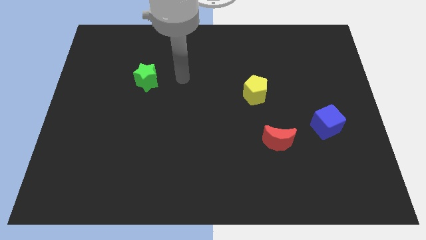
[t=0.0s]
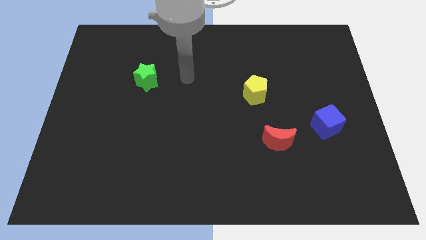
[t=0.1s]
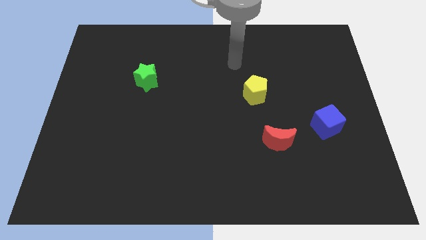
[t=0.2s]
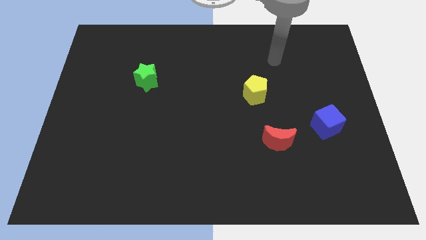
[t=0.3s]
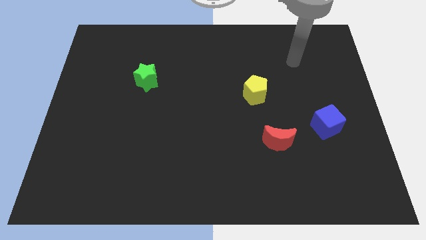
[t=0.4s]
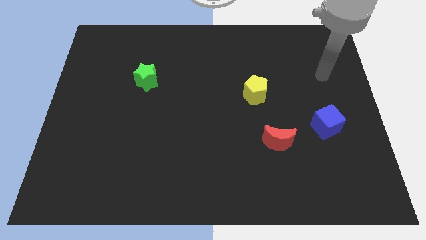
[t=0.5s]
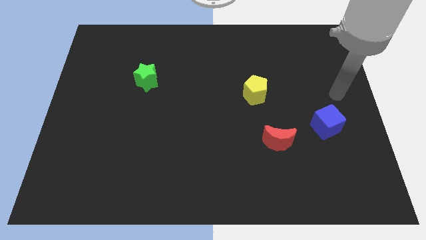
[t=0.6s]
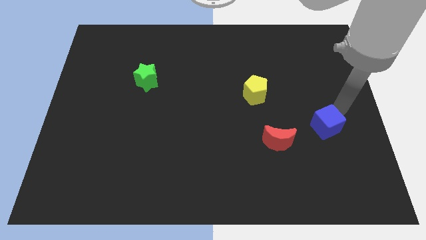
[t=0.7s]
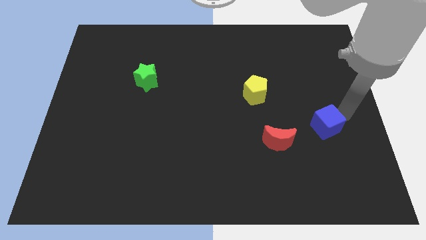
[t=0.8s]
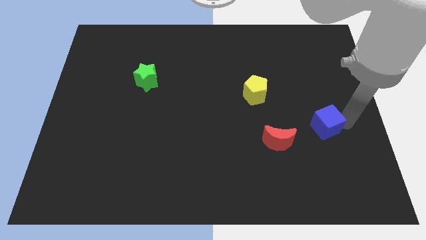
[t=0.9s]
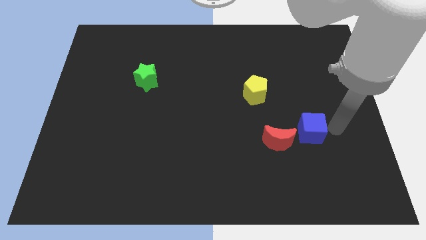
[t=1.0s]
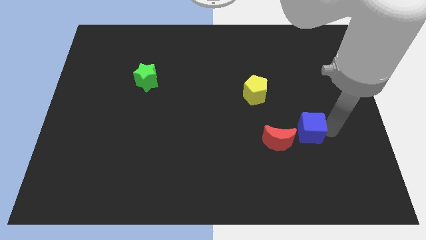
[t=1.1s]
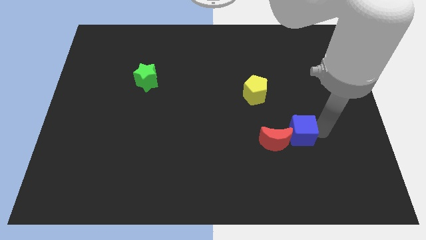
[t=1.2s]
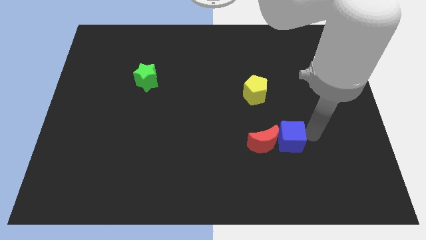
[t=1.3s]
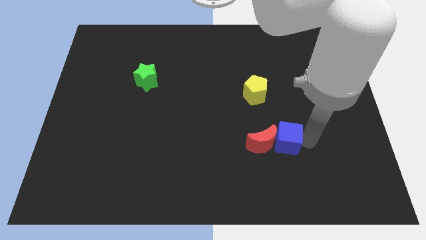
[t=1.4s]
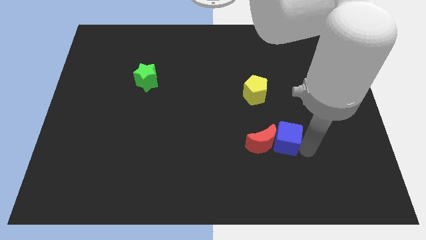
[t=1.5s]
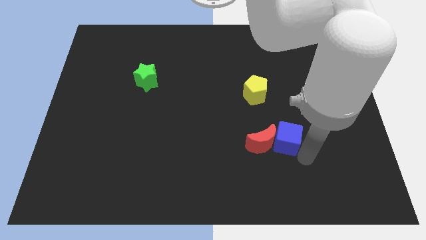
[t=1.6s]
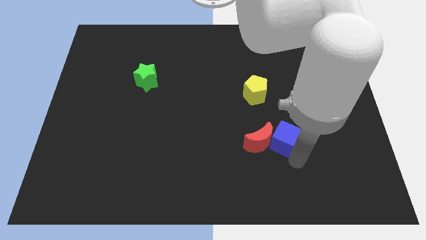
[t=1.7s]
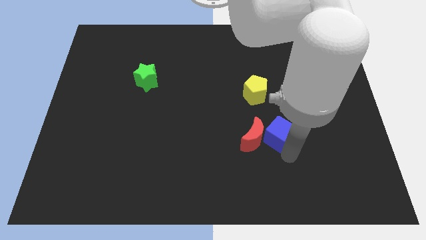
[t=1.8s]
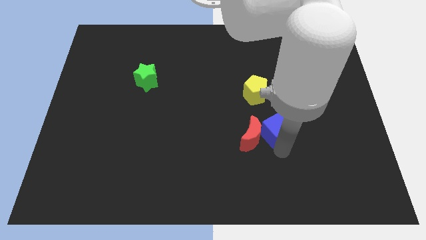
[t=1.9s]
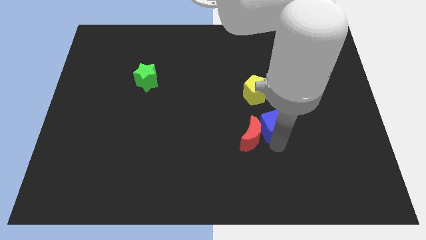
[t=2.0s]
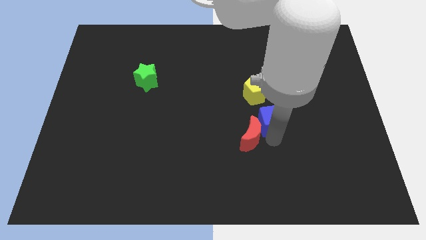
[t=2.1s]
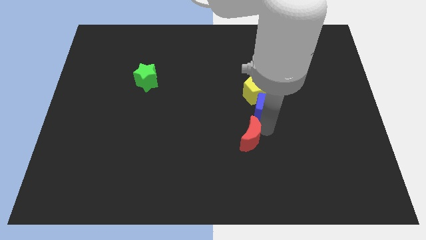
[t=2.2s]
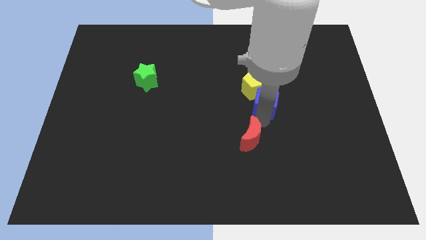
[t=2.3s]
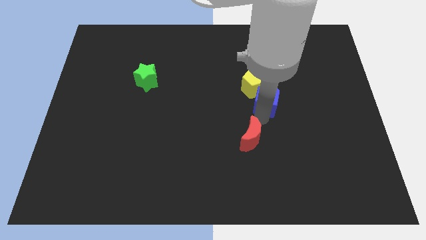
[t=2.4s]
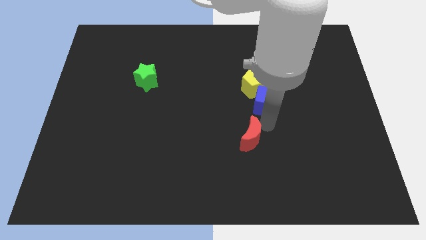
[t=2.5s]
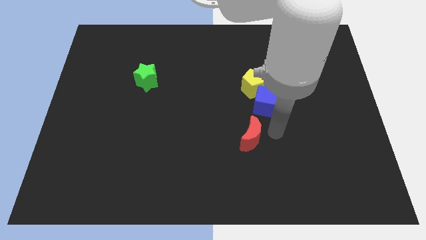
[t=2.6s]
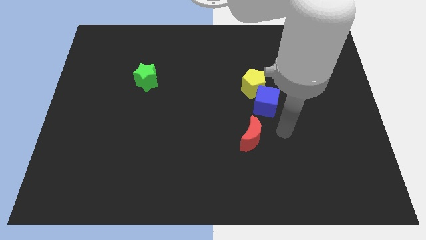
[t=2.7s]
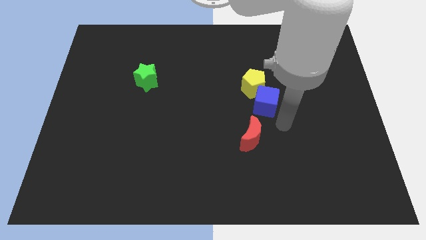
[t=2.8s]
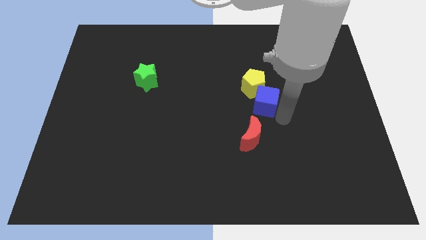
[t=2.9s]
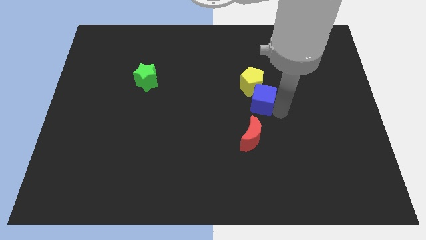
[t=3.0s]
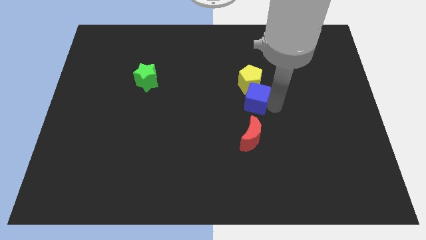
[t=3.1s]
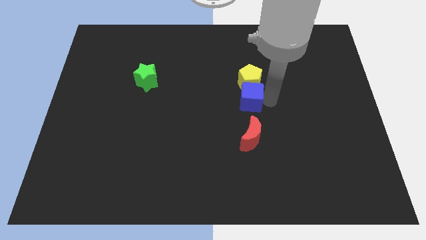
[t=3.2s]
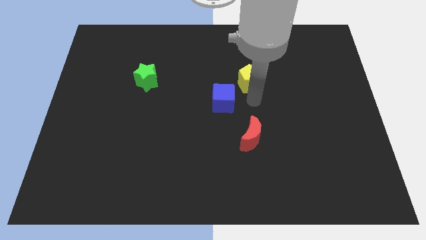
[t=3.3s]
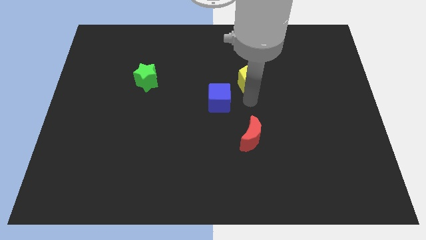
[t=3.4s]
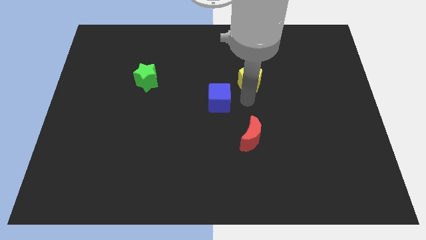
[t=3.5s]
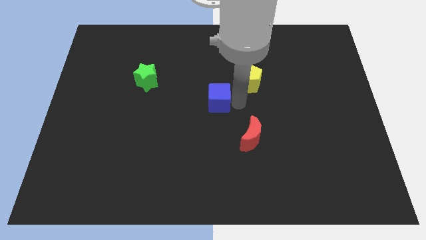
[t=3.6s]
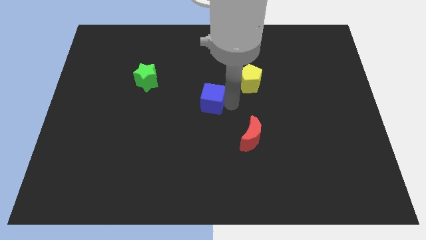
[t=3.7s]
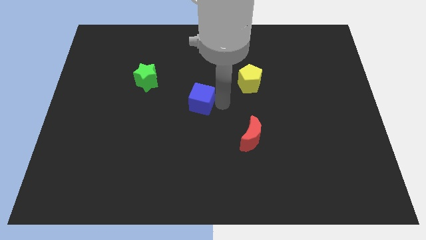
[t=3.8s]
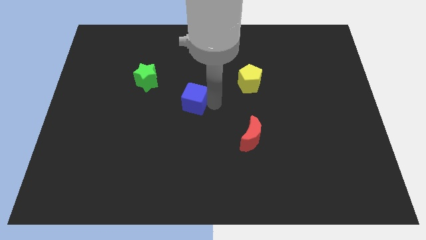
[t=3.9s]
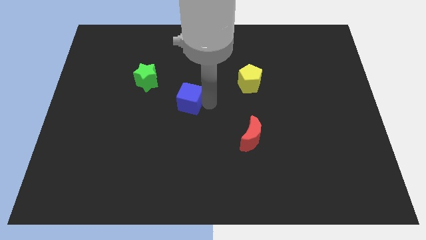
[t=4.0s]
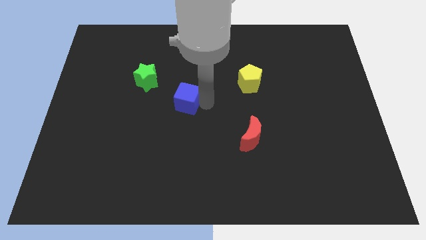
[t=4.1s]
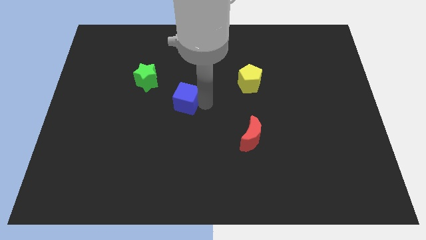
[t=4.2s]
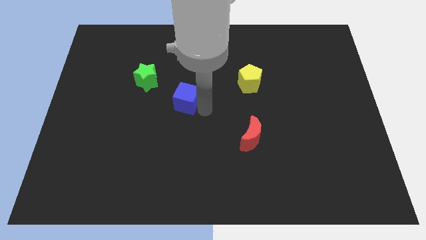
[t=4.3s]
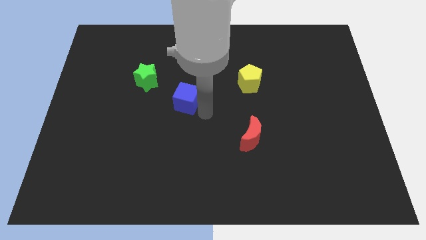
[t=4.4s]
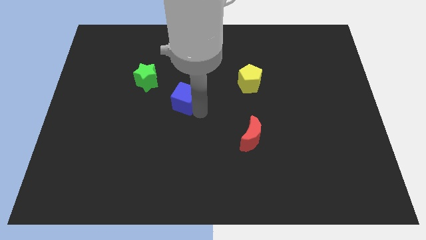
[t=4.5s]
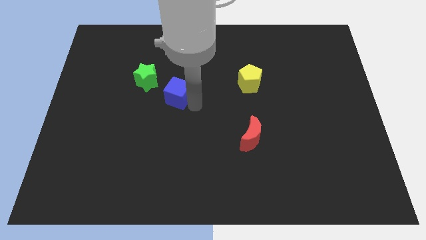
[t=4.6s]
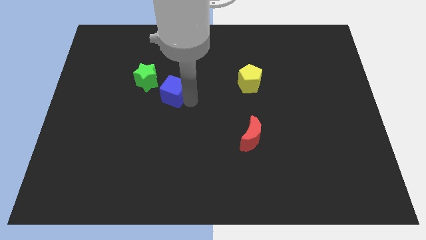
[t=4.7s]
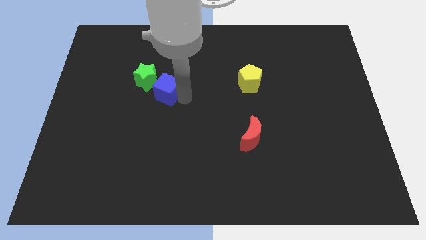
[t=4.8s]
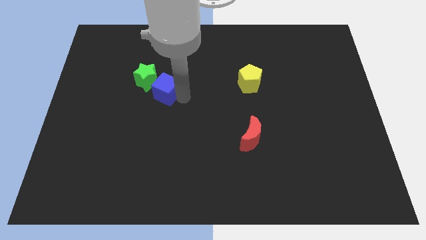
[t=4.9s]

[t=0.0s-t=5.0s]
put the cube towards the green star

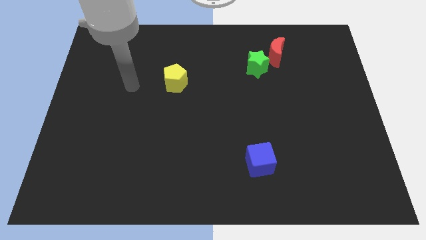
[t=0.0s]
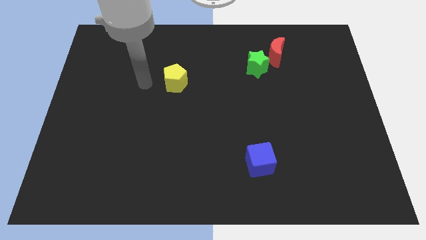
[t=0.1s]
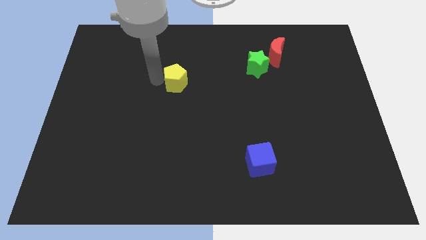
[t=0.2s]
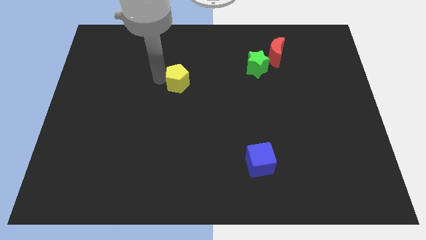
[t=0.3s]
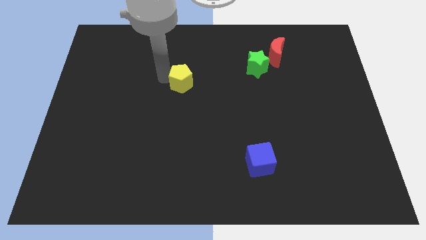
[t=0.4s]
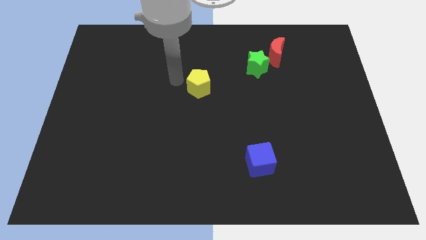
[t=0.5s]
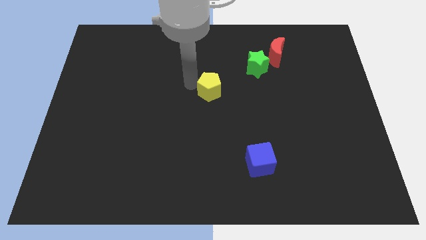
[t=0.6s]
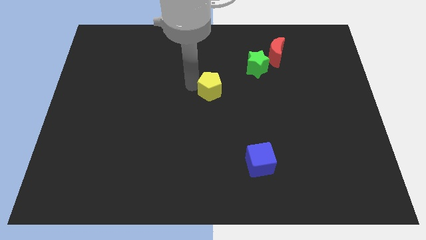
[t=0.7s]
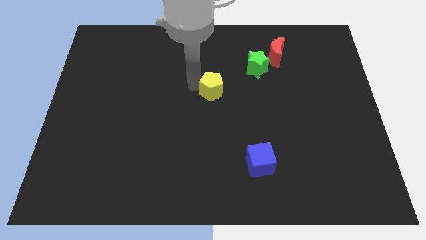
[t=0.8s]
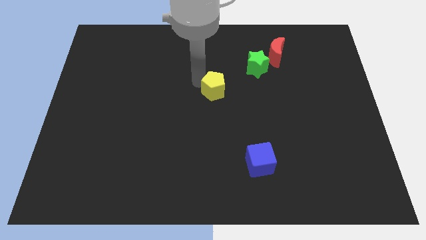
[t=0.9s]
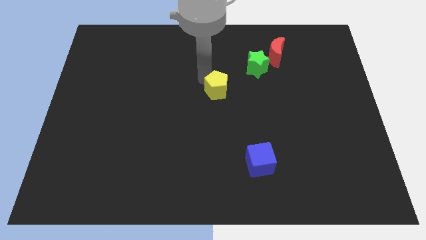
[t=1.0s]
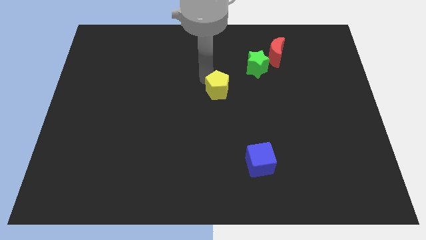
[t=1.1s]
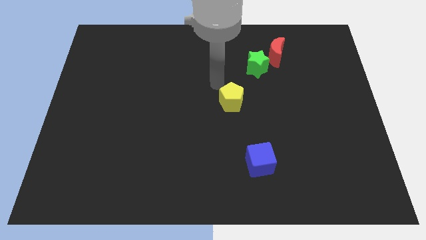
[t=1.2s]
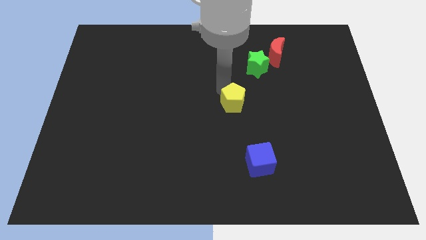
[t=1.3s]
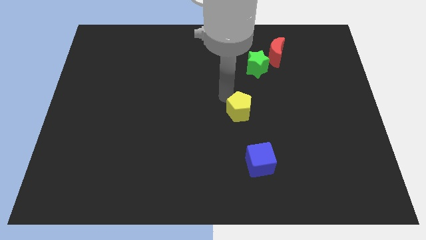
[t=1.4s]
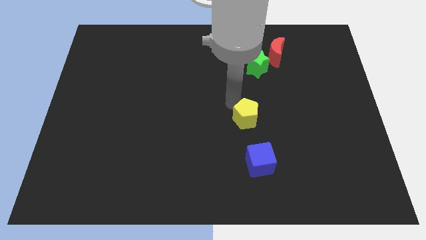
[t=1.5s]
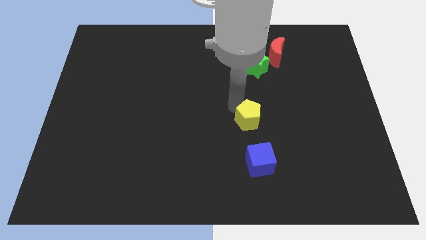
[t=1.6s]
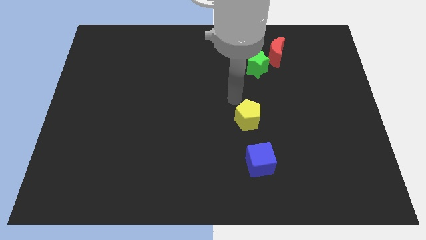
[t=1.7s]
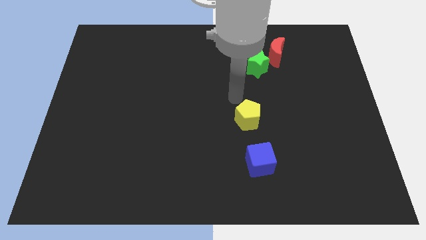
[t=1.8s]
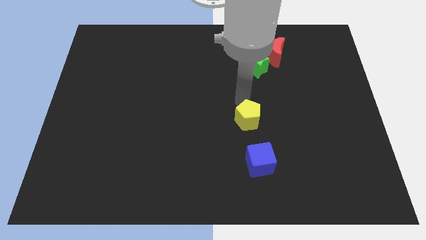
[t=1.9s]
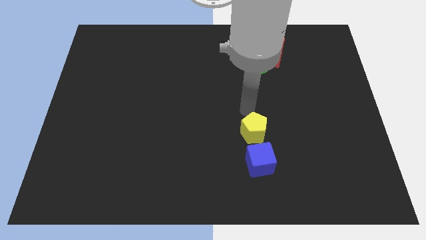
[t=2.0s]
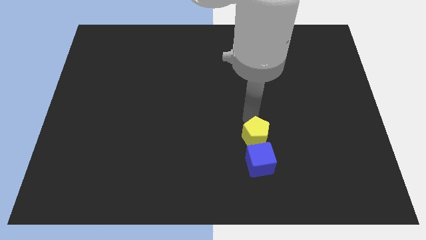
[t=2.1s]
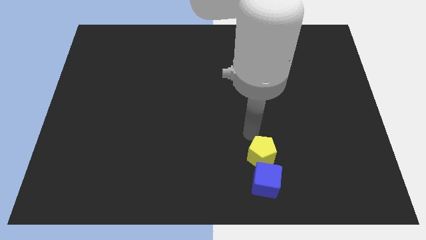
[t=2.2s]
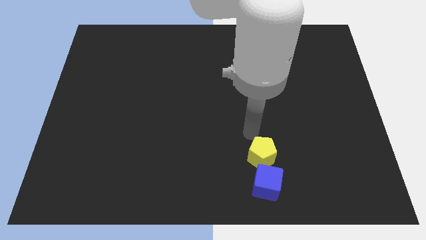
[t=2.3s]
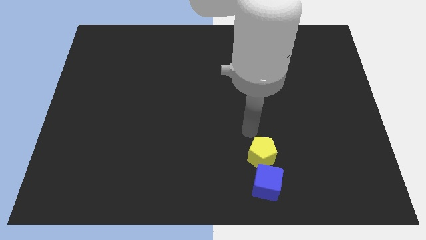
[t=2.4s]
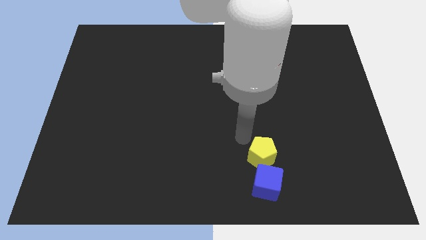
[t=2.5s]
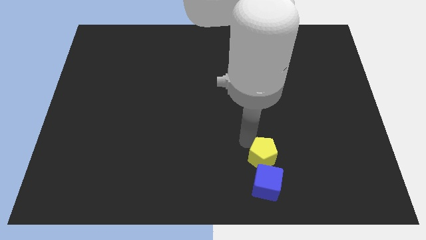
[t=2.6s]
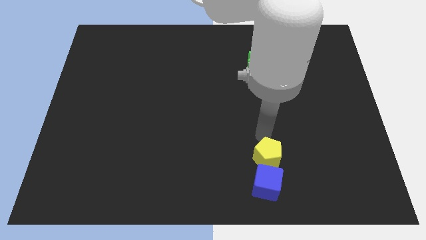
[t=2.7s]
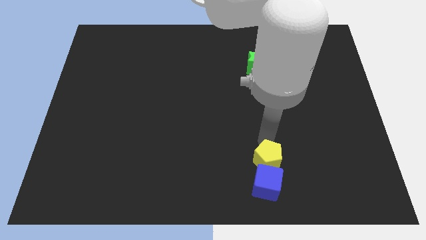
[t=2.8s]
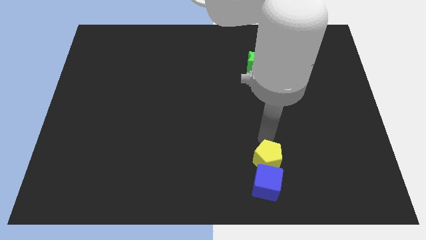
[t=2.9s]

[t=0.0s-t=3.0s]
move the yellow pentagon close to the blue block

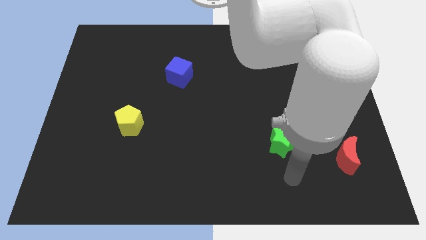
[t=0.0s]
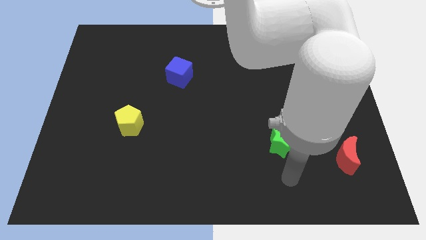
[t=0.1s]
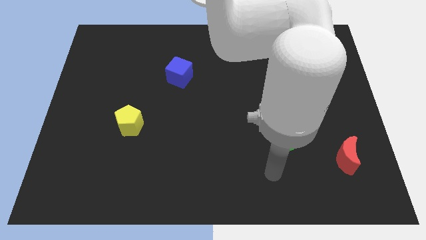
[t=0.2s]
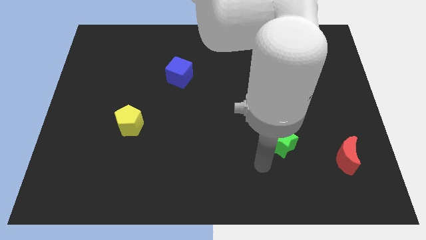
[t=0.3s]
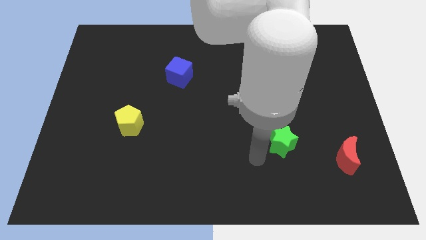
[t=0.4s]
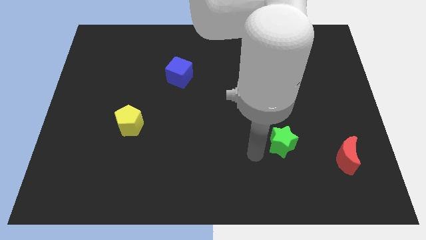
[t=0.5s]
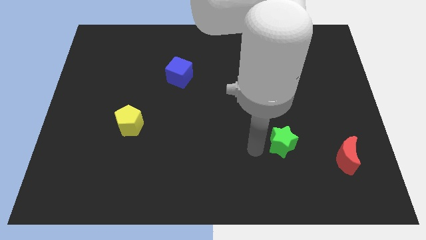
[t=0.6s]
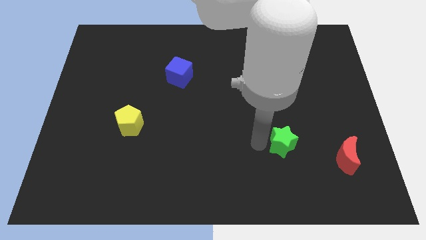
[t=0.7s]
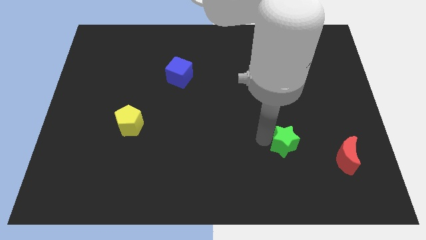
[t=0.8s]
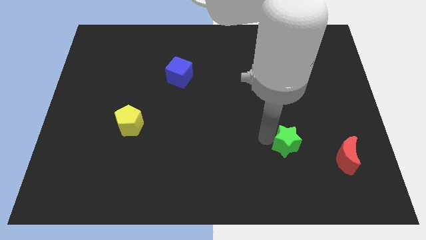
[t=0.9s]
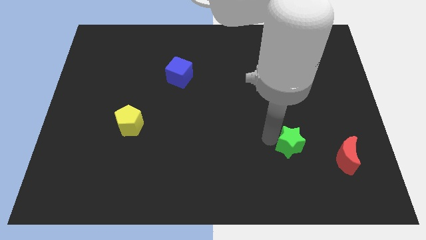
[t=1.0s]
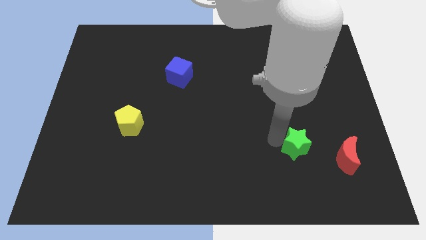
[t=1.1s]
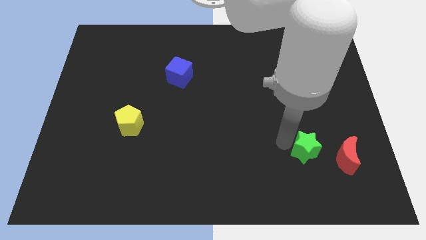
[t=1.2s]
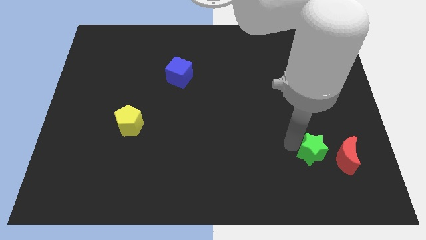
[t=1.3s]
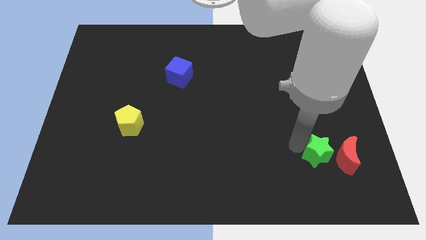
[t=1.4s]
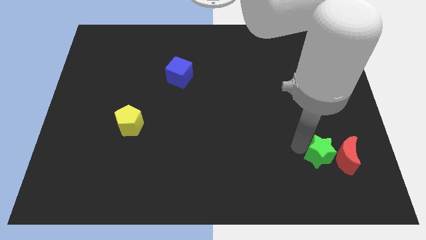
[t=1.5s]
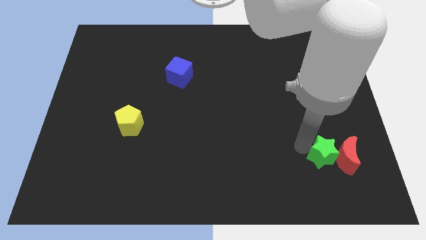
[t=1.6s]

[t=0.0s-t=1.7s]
push the star close to the red block
